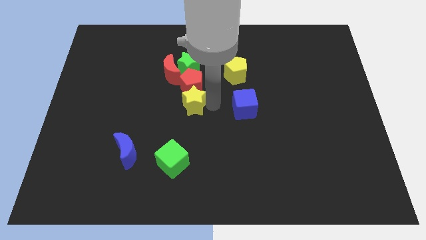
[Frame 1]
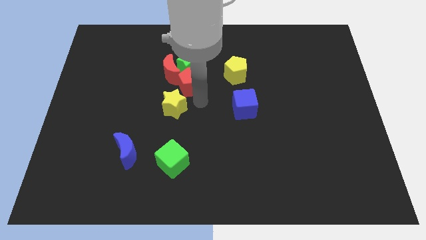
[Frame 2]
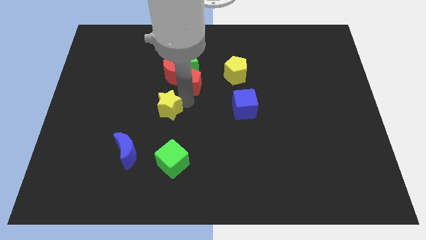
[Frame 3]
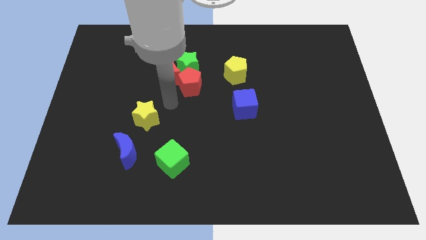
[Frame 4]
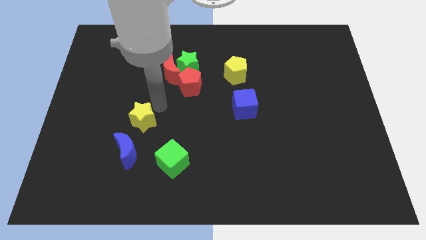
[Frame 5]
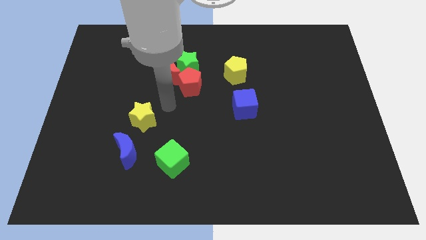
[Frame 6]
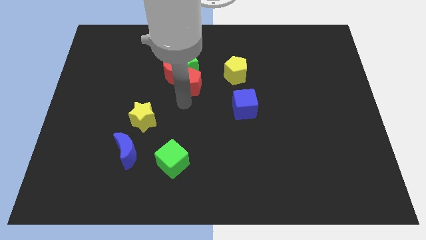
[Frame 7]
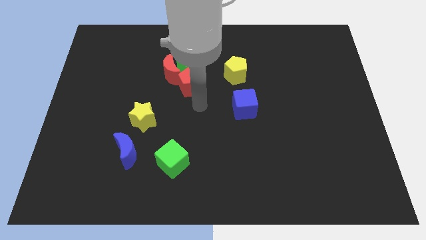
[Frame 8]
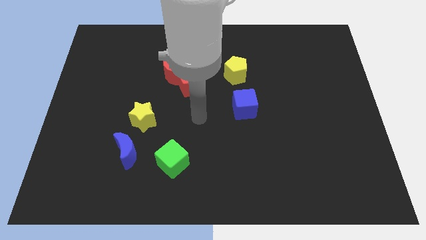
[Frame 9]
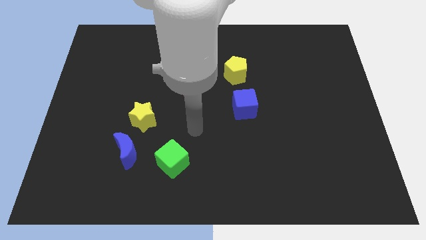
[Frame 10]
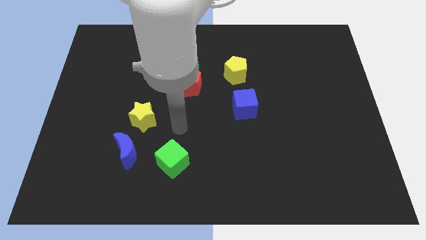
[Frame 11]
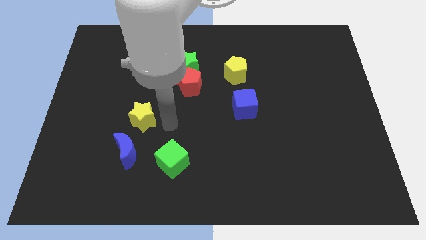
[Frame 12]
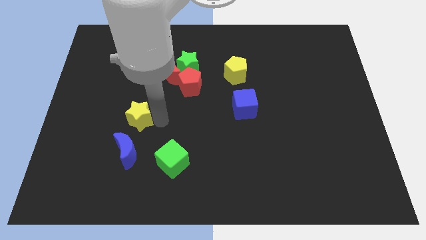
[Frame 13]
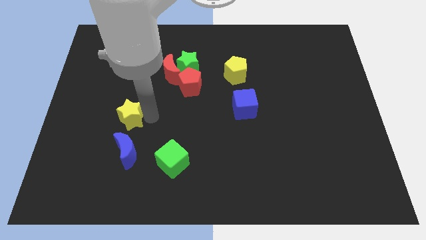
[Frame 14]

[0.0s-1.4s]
move the yellow star to the top of the blue crescent

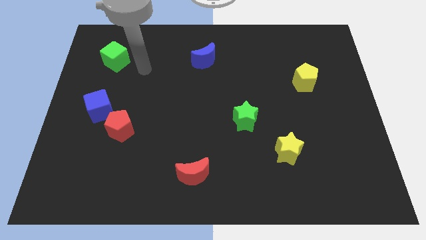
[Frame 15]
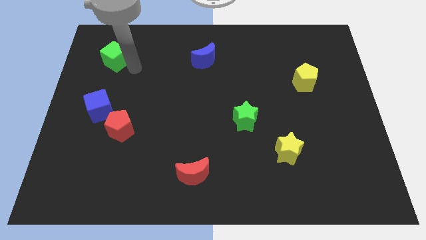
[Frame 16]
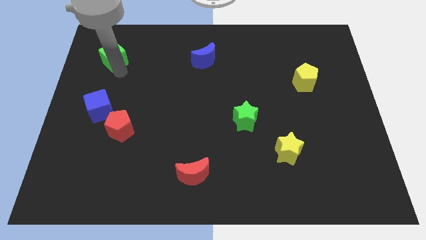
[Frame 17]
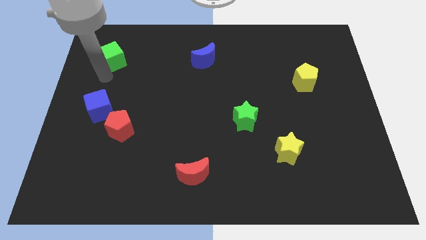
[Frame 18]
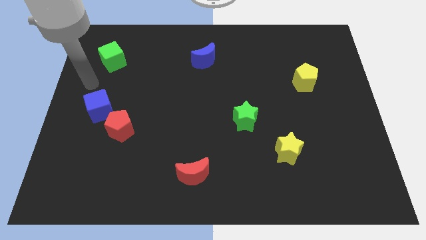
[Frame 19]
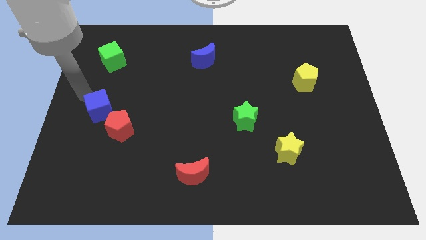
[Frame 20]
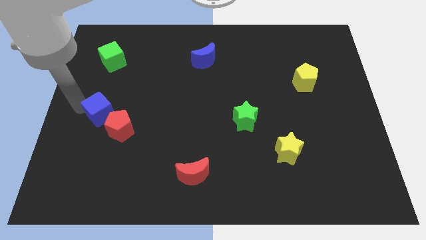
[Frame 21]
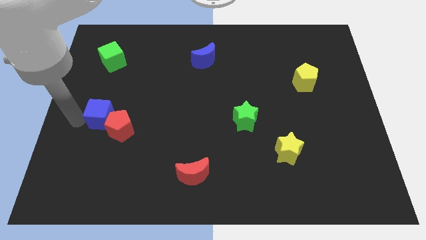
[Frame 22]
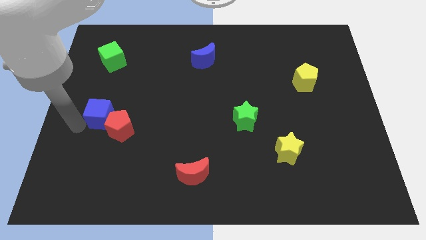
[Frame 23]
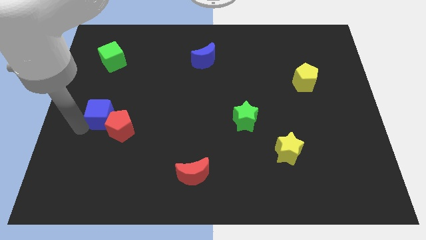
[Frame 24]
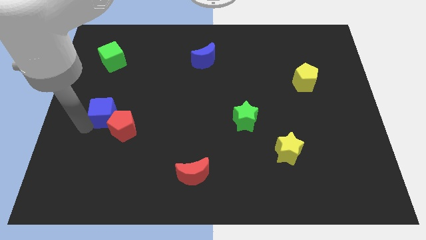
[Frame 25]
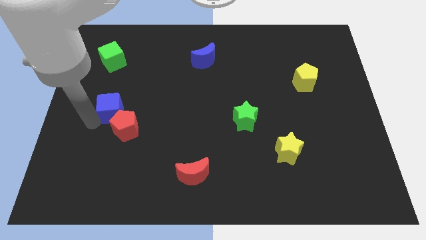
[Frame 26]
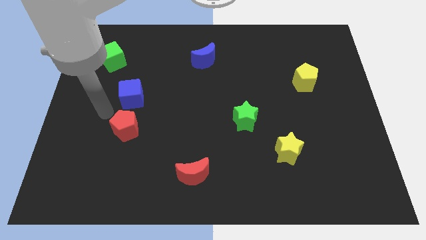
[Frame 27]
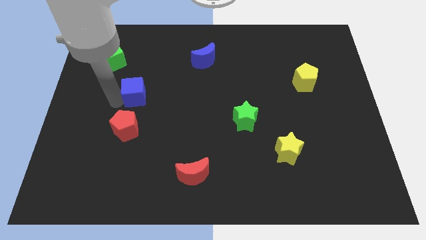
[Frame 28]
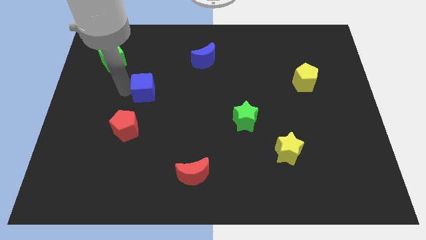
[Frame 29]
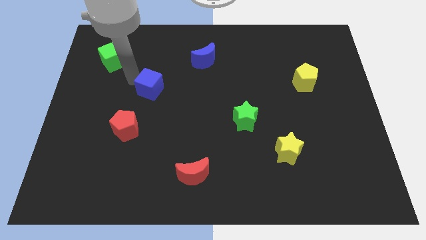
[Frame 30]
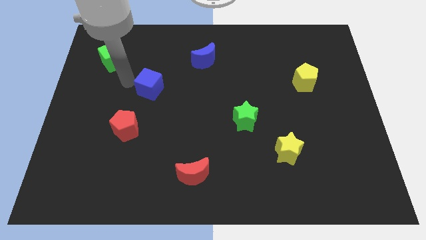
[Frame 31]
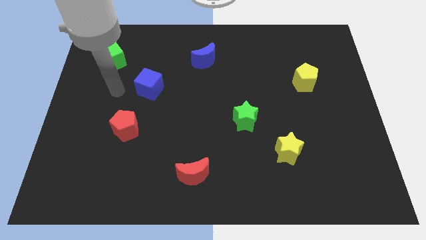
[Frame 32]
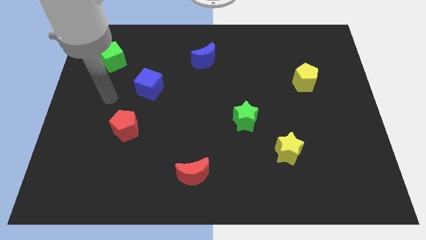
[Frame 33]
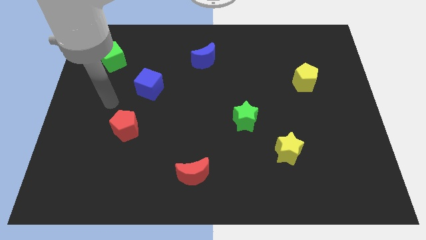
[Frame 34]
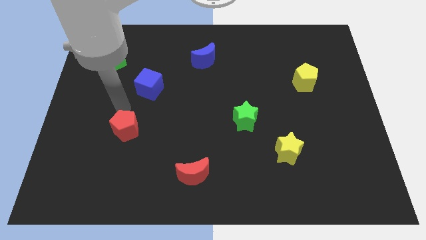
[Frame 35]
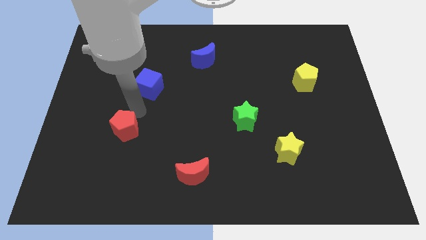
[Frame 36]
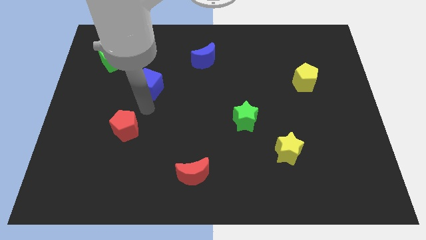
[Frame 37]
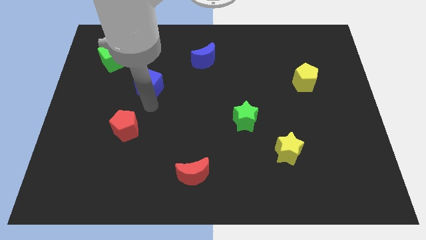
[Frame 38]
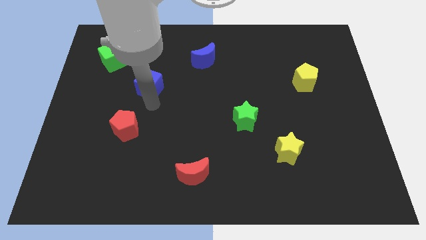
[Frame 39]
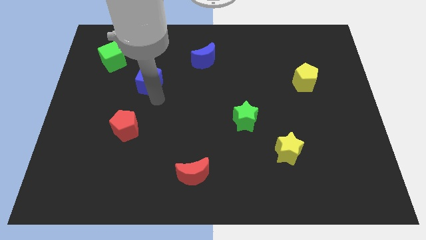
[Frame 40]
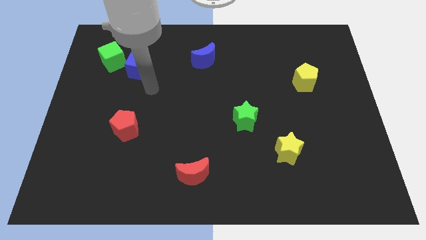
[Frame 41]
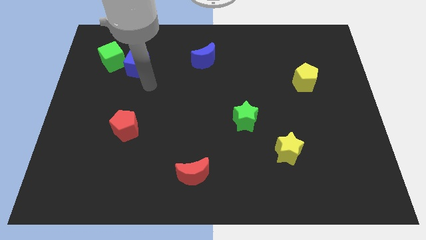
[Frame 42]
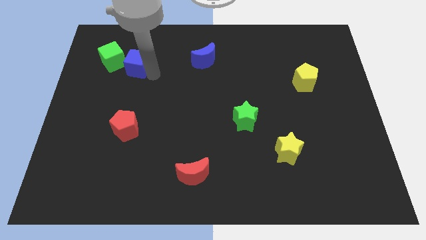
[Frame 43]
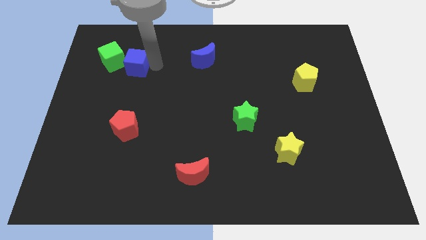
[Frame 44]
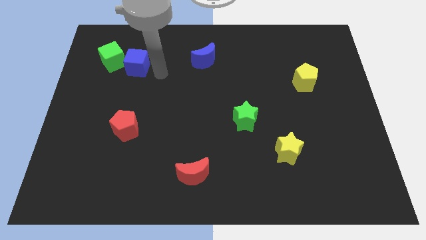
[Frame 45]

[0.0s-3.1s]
move the blue cube close to the green cube

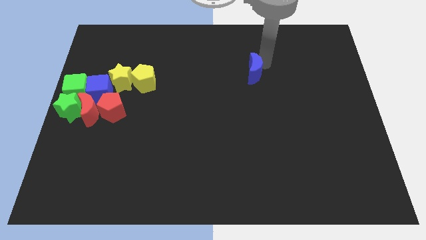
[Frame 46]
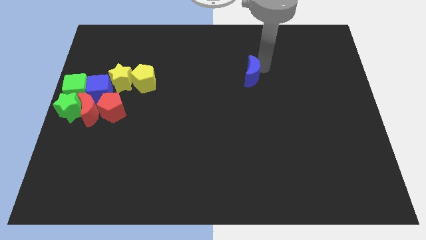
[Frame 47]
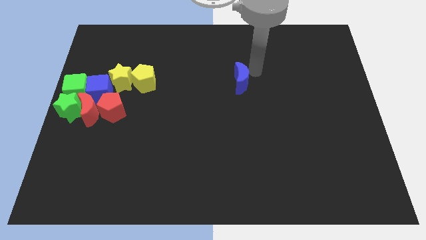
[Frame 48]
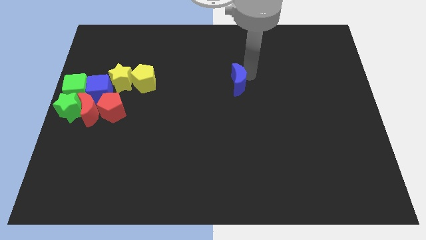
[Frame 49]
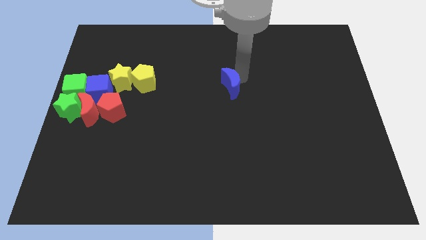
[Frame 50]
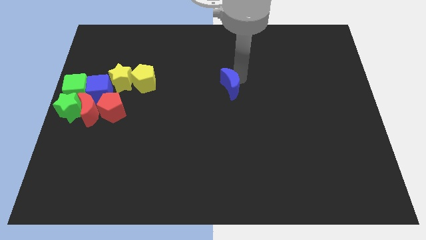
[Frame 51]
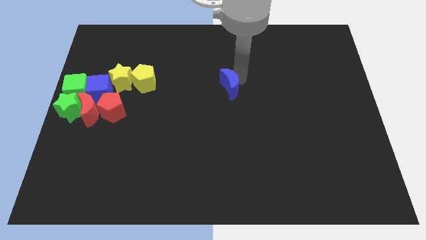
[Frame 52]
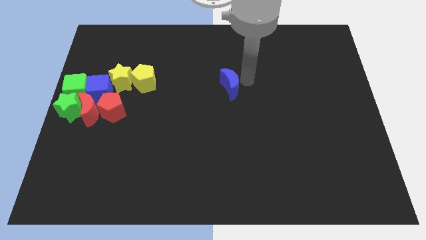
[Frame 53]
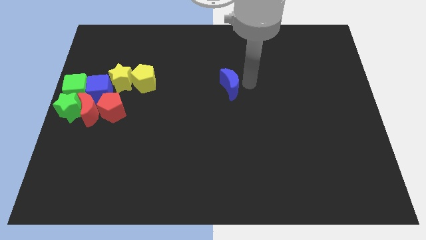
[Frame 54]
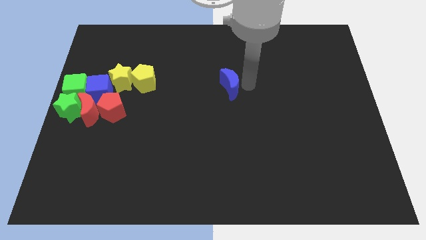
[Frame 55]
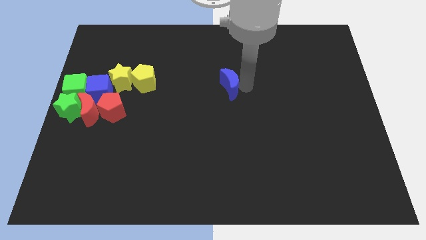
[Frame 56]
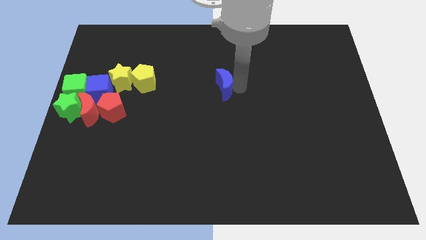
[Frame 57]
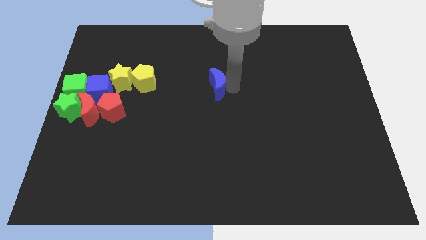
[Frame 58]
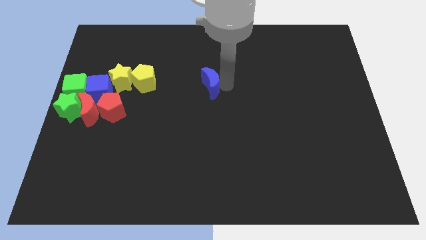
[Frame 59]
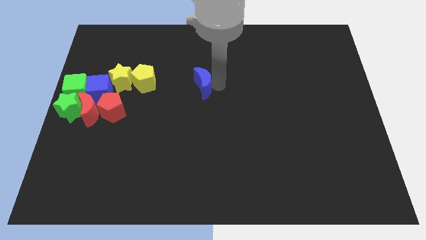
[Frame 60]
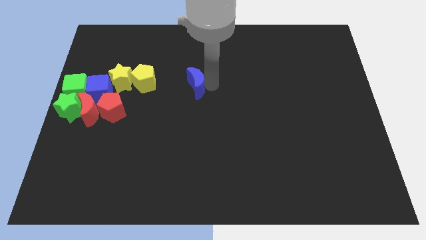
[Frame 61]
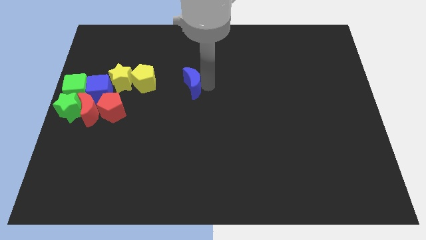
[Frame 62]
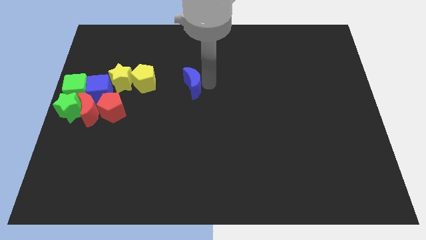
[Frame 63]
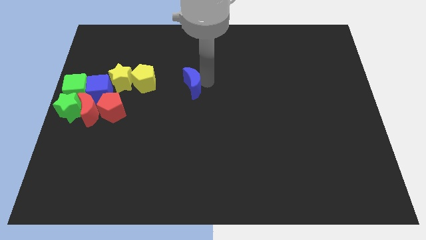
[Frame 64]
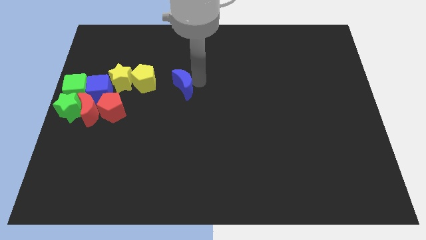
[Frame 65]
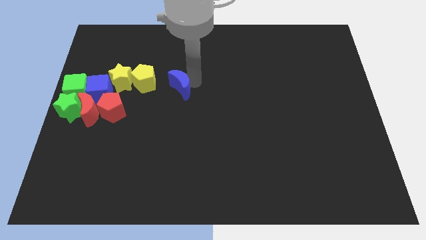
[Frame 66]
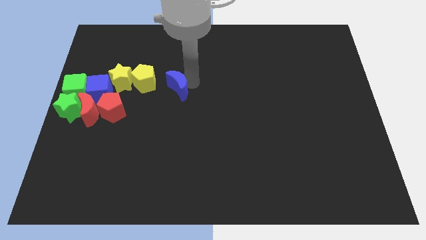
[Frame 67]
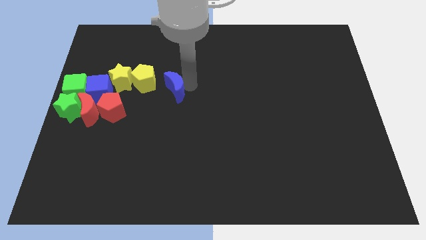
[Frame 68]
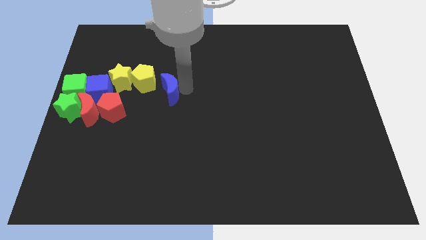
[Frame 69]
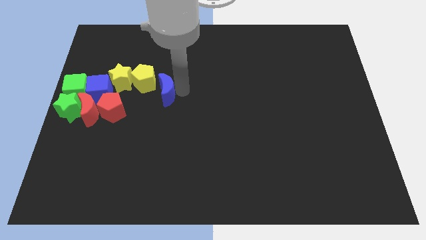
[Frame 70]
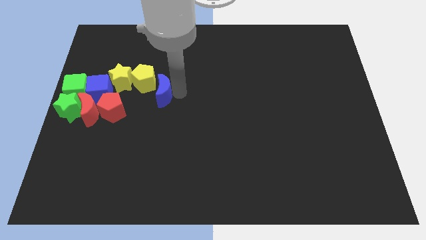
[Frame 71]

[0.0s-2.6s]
move the blue crescent to the bottom right of the yellow pentagon

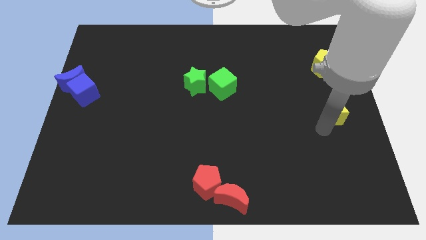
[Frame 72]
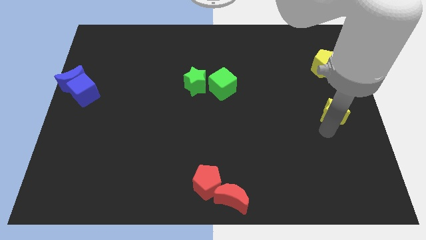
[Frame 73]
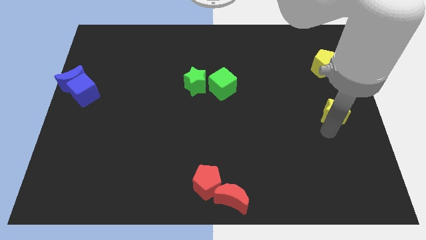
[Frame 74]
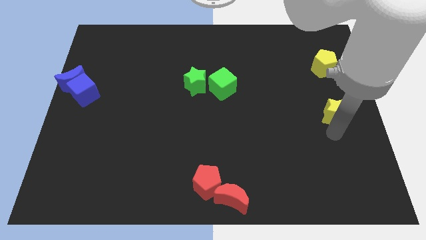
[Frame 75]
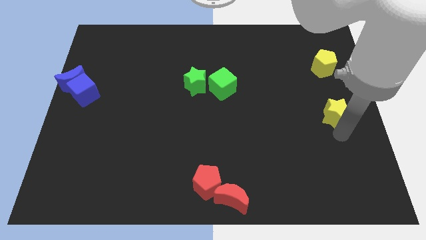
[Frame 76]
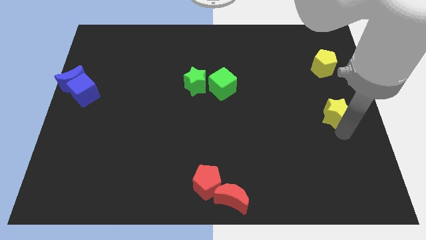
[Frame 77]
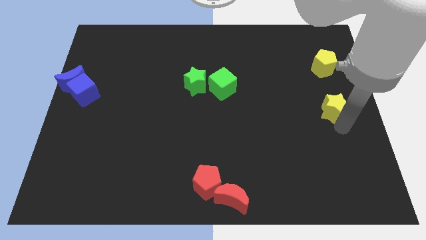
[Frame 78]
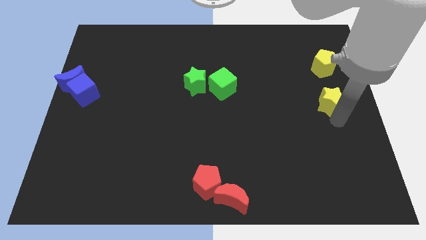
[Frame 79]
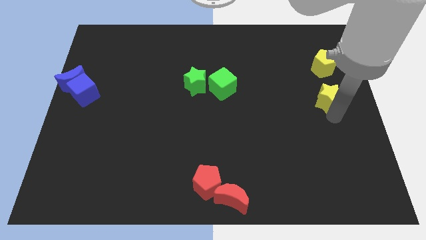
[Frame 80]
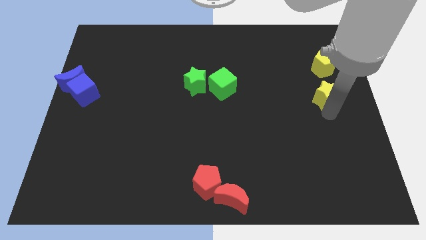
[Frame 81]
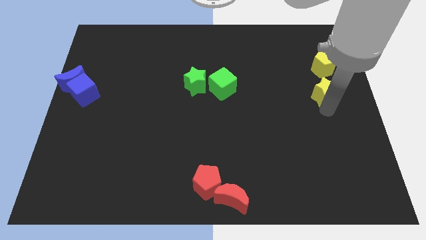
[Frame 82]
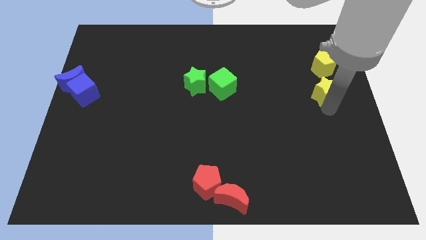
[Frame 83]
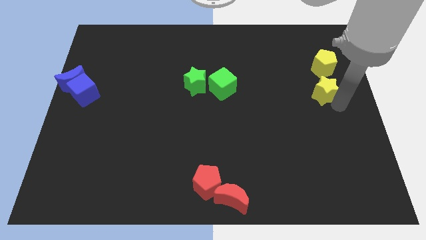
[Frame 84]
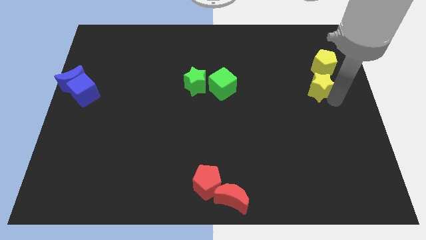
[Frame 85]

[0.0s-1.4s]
place yellow star at the bottom of the yellow pentagon

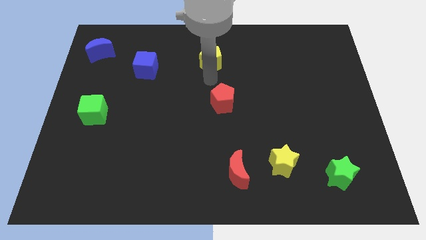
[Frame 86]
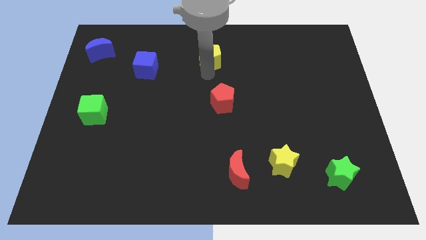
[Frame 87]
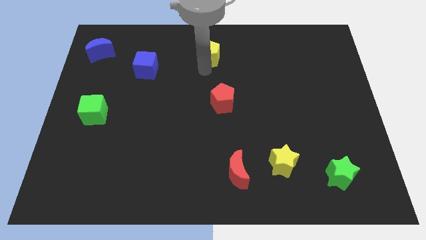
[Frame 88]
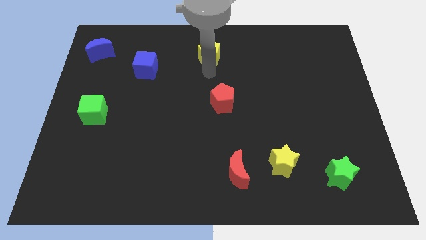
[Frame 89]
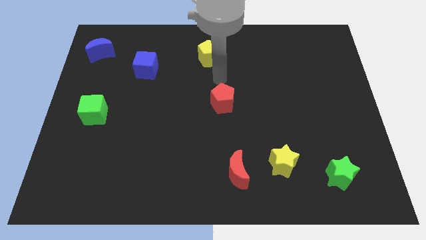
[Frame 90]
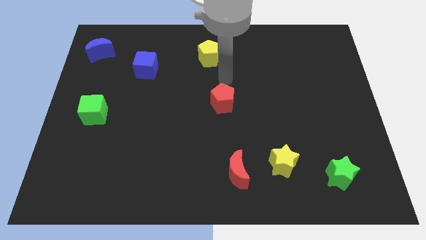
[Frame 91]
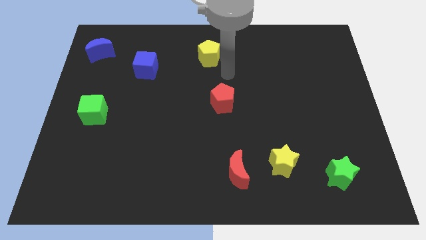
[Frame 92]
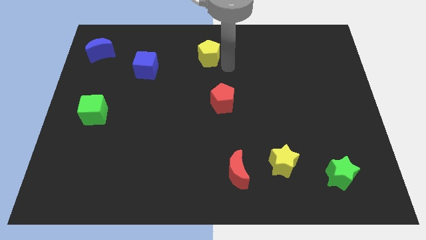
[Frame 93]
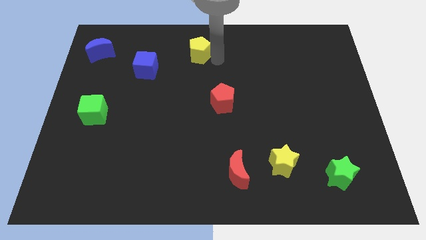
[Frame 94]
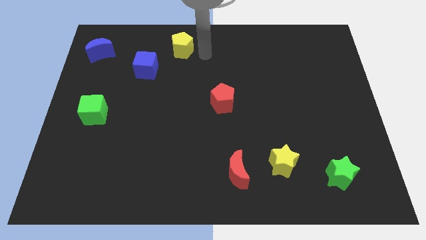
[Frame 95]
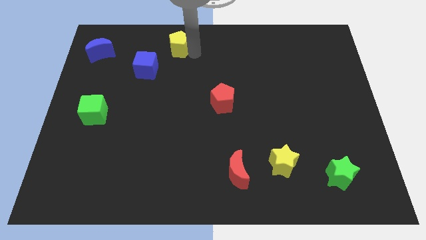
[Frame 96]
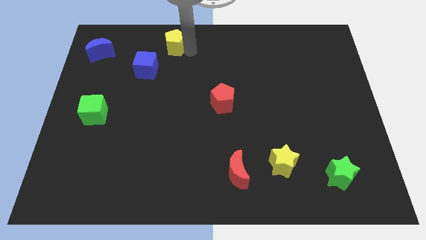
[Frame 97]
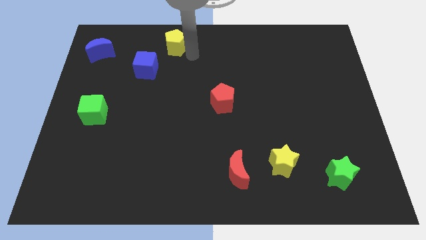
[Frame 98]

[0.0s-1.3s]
place the yellow pentagon diagonally to blue cube
